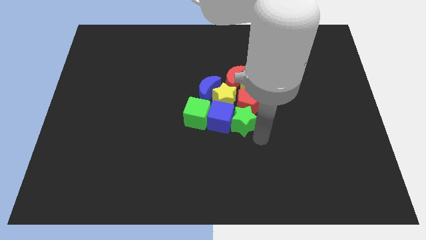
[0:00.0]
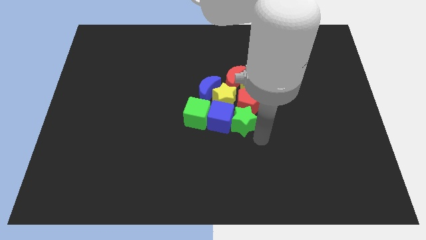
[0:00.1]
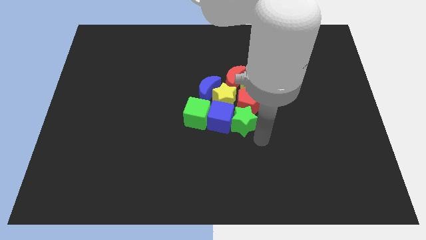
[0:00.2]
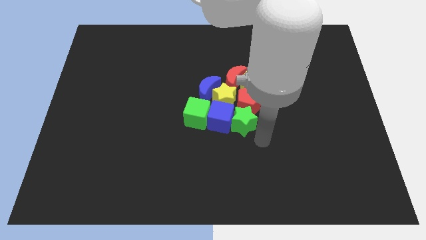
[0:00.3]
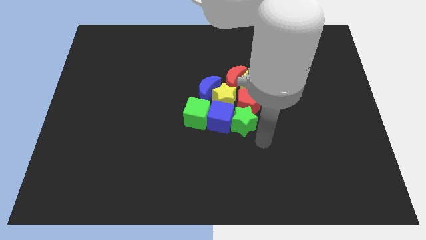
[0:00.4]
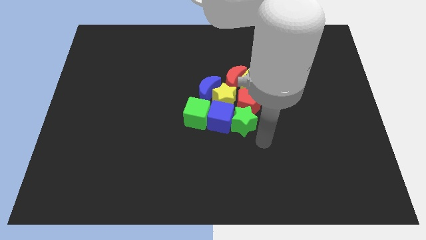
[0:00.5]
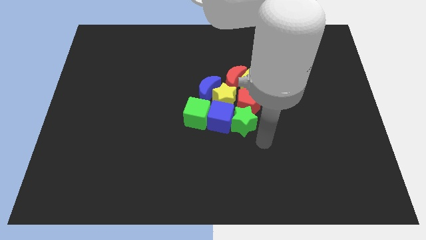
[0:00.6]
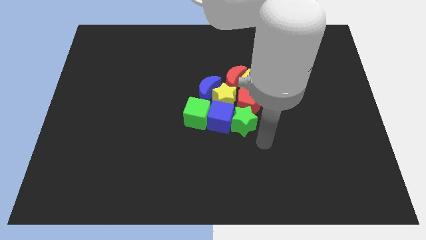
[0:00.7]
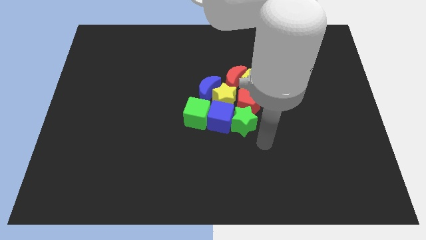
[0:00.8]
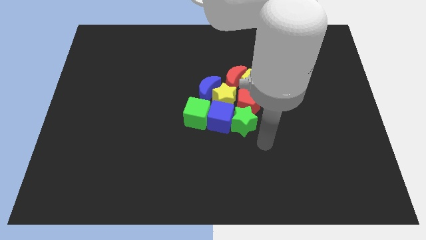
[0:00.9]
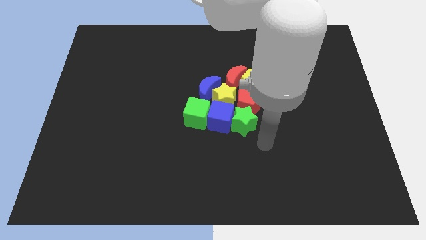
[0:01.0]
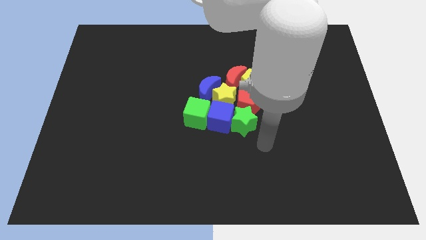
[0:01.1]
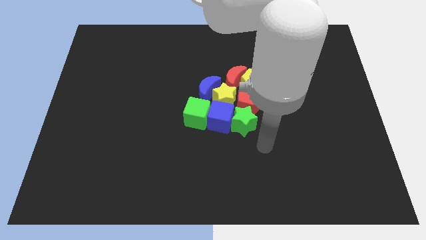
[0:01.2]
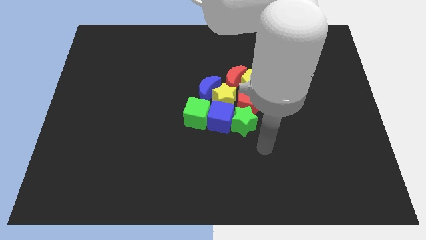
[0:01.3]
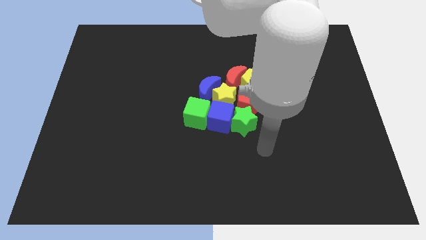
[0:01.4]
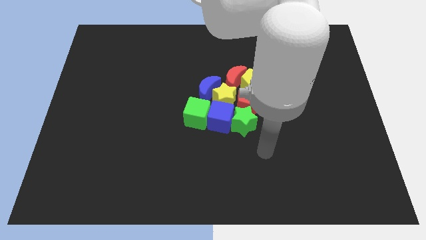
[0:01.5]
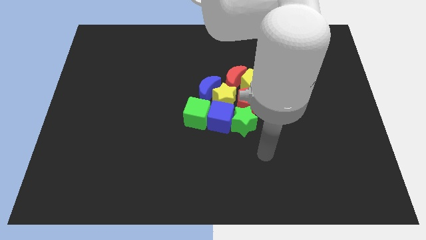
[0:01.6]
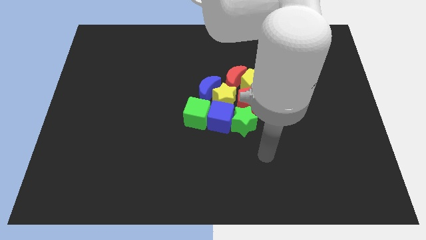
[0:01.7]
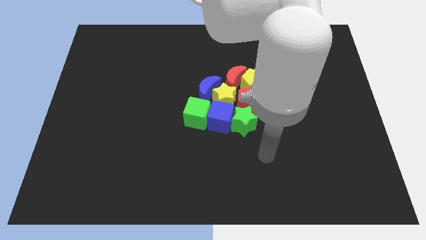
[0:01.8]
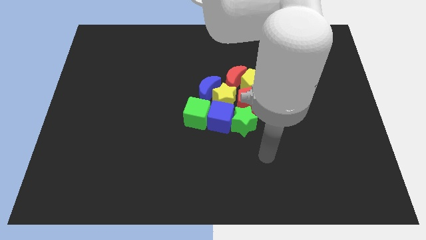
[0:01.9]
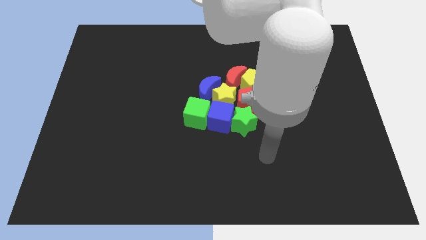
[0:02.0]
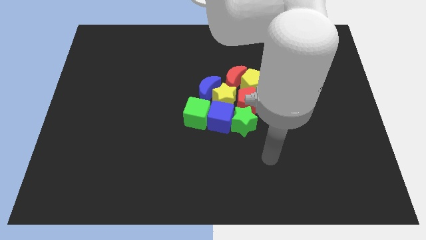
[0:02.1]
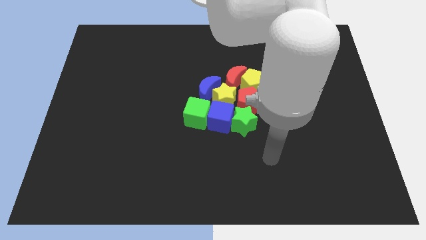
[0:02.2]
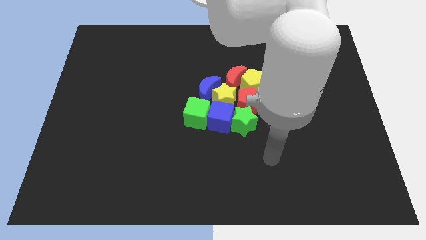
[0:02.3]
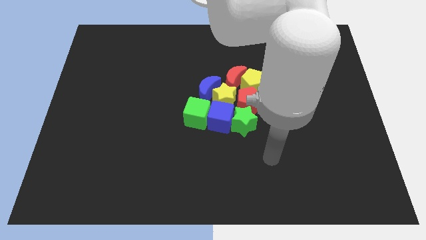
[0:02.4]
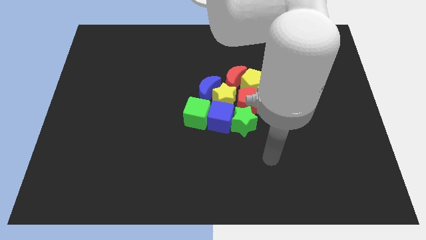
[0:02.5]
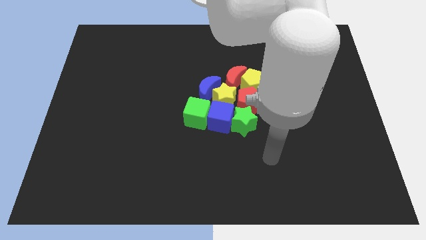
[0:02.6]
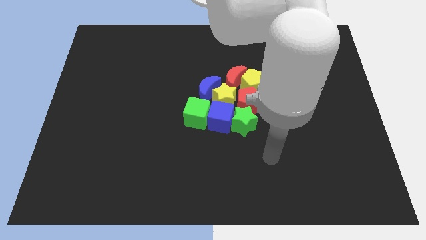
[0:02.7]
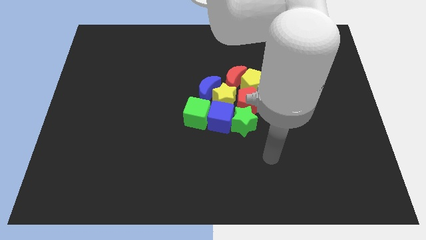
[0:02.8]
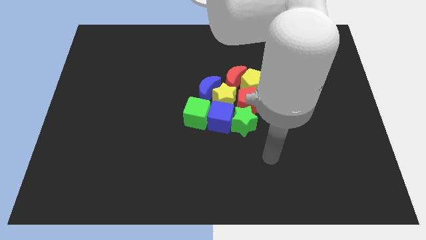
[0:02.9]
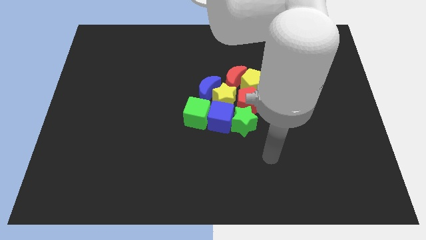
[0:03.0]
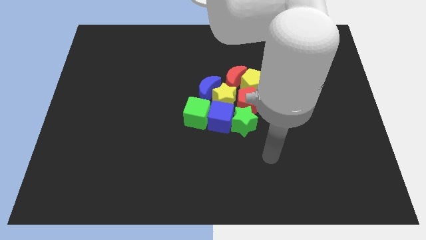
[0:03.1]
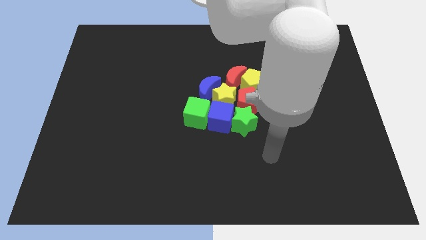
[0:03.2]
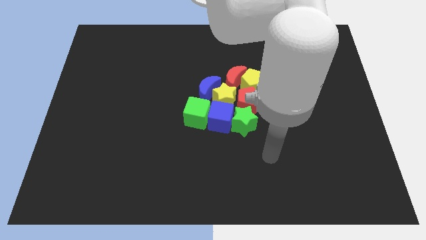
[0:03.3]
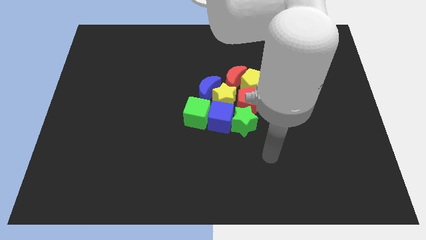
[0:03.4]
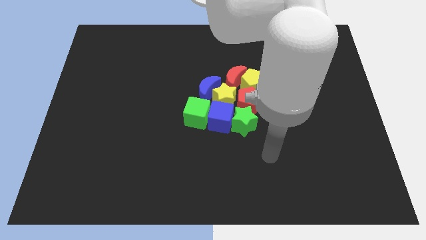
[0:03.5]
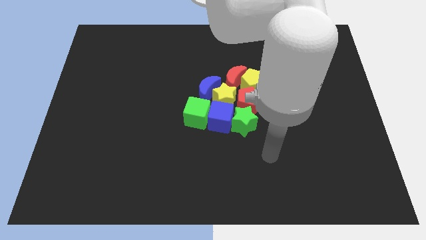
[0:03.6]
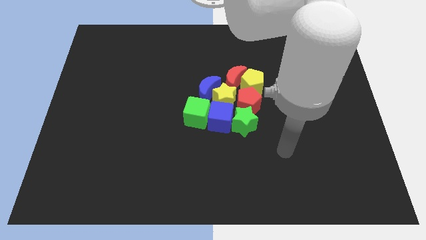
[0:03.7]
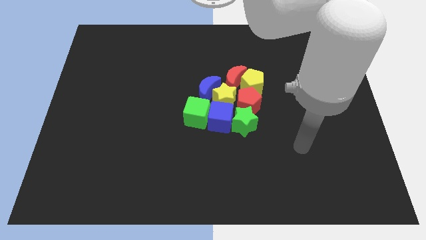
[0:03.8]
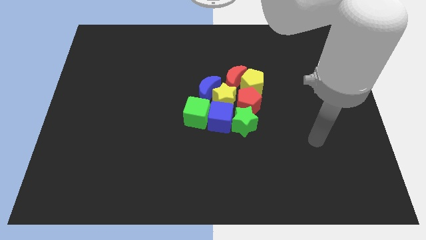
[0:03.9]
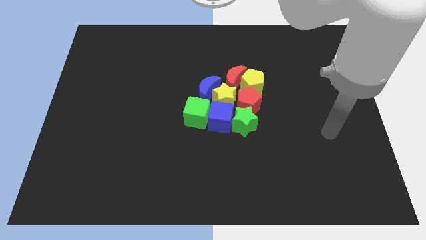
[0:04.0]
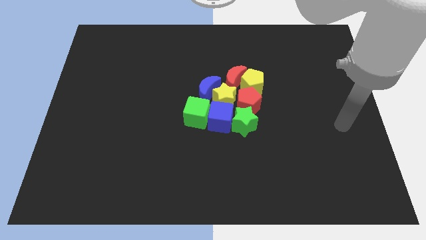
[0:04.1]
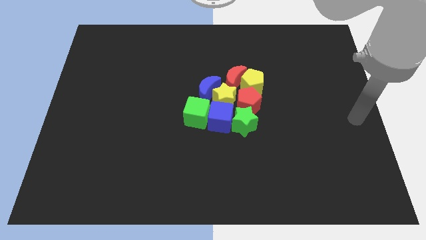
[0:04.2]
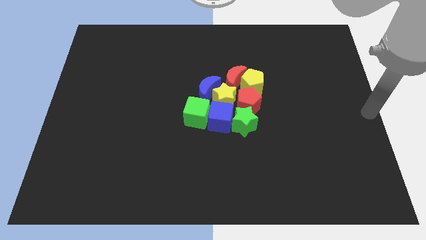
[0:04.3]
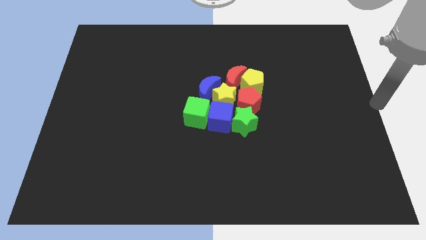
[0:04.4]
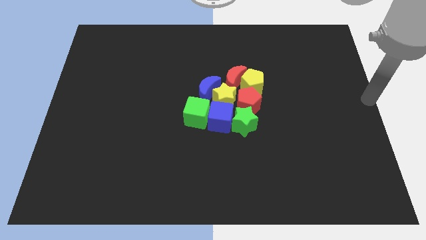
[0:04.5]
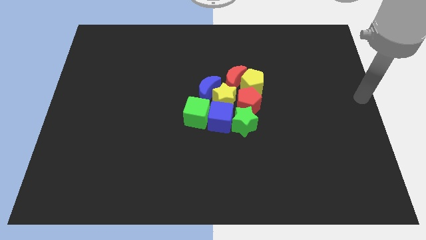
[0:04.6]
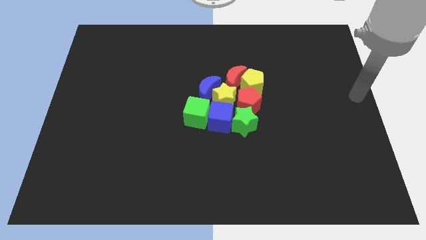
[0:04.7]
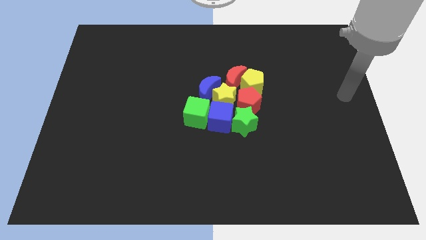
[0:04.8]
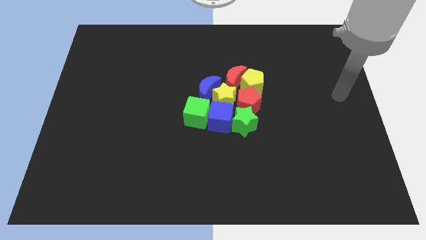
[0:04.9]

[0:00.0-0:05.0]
move your hand away from the green star

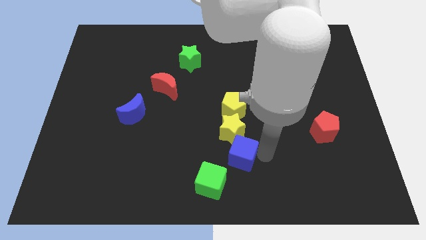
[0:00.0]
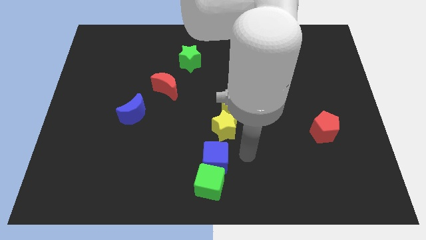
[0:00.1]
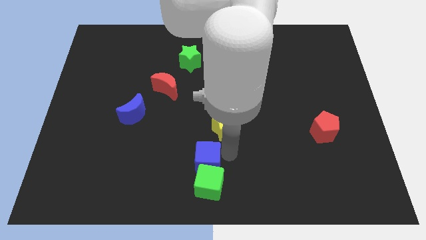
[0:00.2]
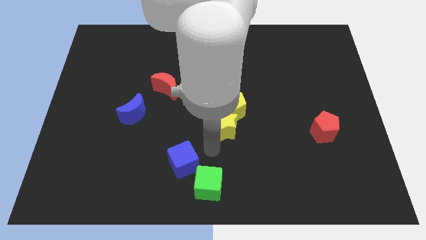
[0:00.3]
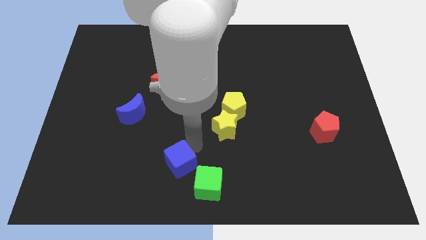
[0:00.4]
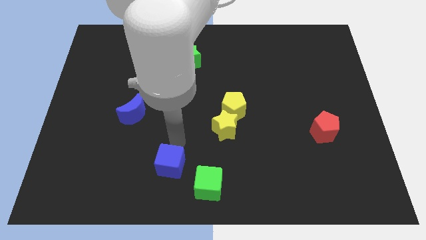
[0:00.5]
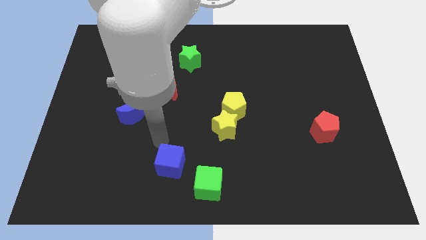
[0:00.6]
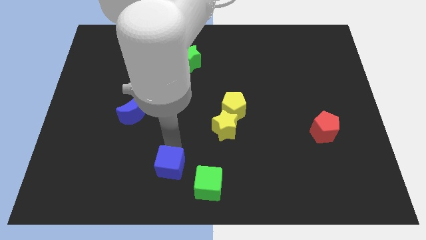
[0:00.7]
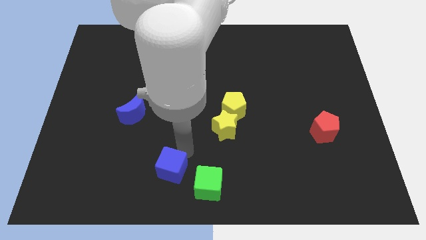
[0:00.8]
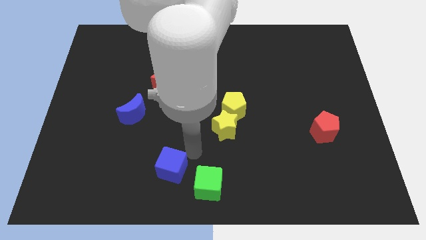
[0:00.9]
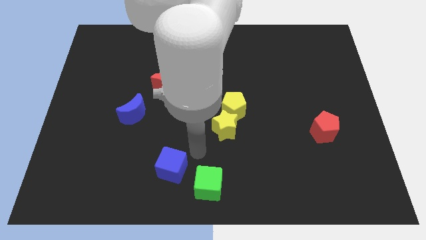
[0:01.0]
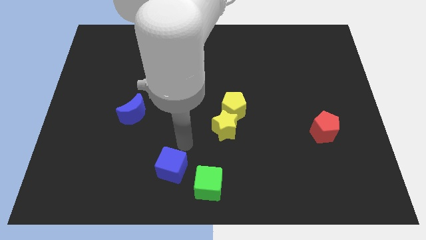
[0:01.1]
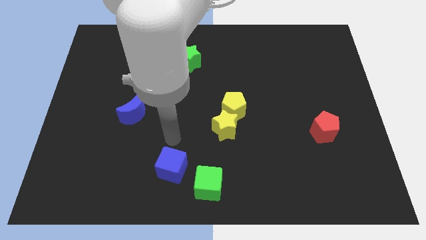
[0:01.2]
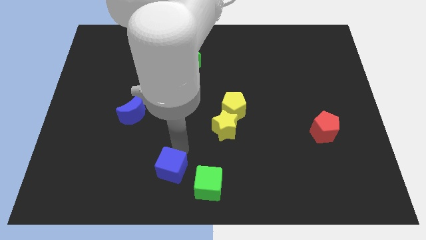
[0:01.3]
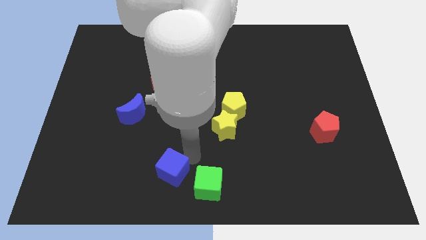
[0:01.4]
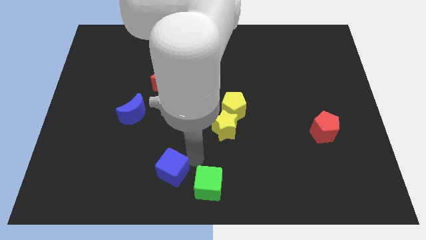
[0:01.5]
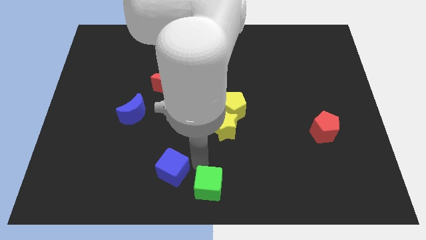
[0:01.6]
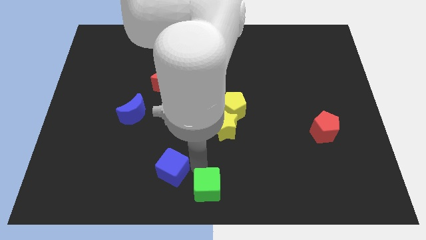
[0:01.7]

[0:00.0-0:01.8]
place the blue cube left side of green cube

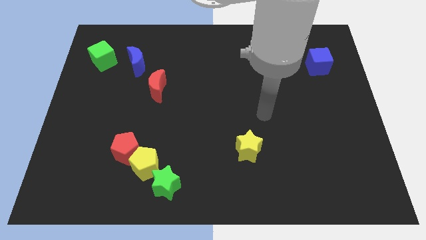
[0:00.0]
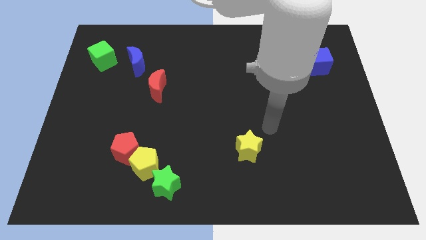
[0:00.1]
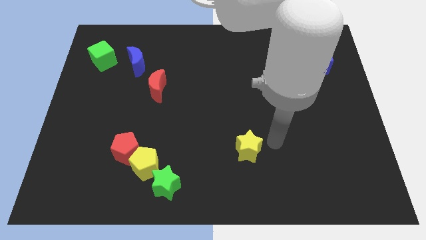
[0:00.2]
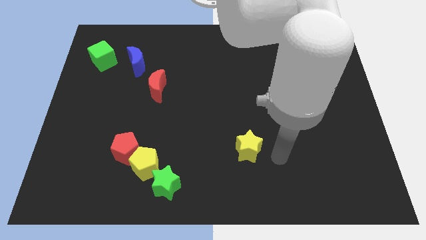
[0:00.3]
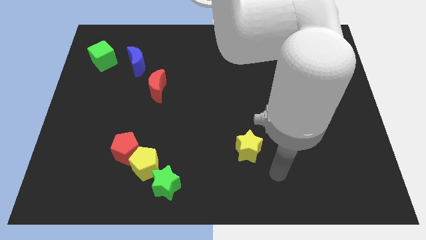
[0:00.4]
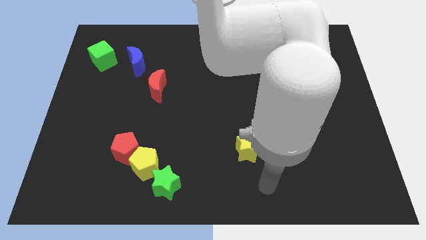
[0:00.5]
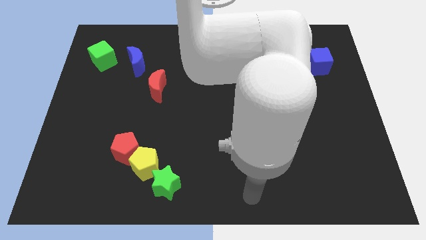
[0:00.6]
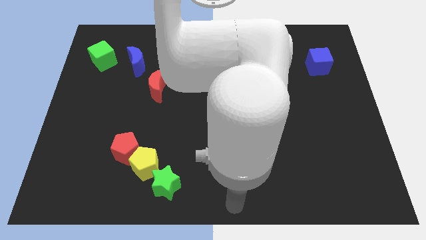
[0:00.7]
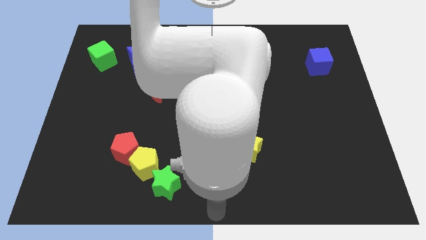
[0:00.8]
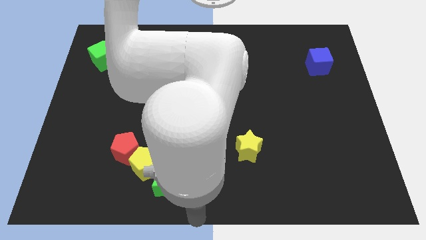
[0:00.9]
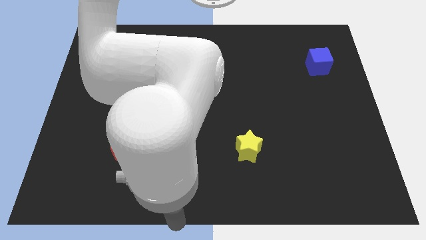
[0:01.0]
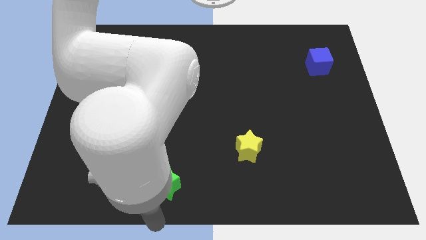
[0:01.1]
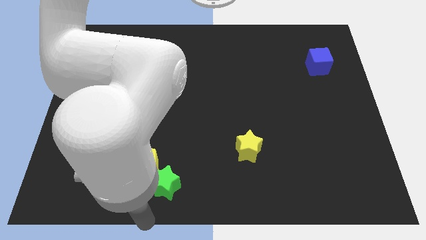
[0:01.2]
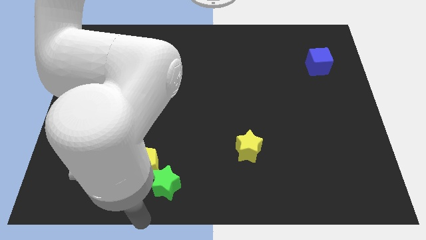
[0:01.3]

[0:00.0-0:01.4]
move arm towards the green star

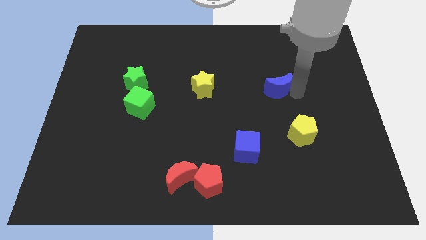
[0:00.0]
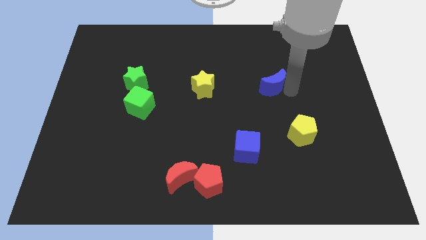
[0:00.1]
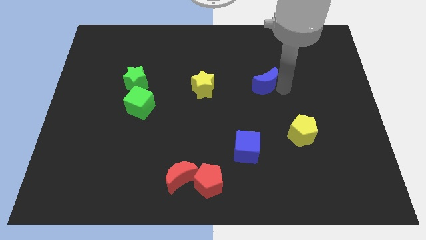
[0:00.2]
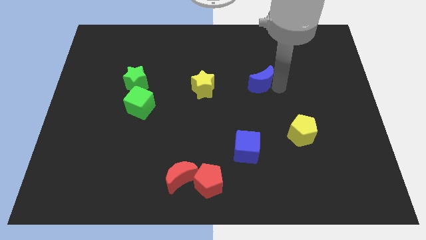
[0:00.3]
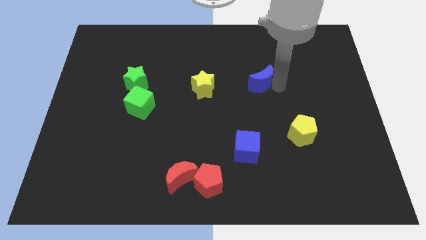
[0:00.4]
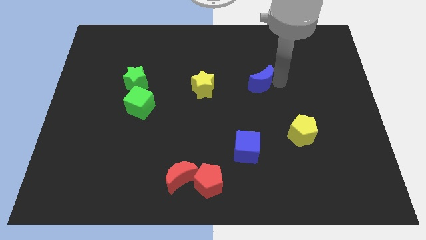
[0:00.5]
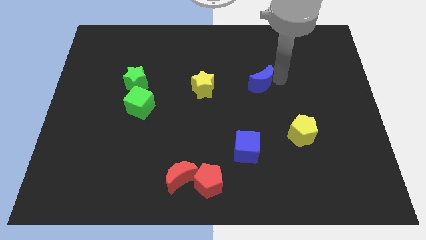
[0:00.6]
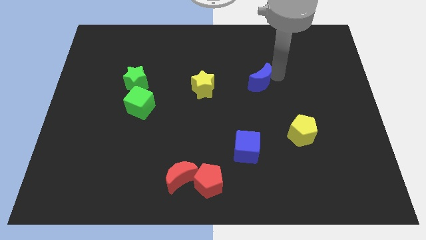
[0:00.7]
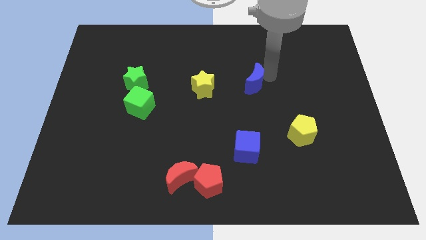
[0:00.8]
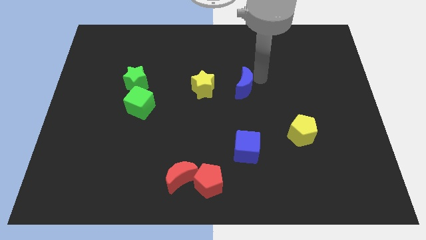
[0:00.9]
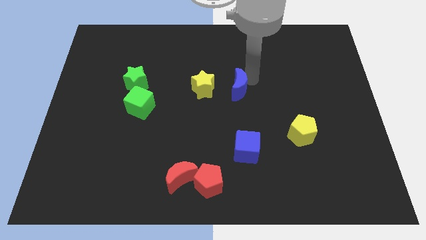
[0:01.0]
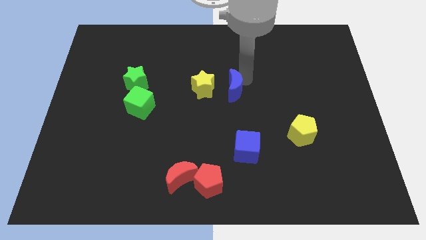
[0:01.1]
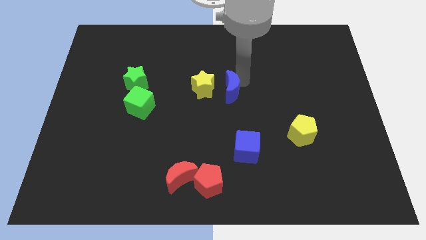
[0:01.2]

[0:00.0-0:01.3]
push the blue crescent close to the yellow star
